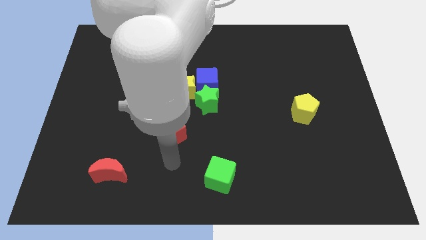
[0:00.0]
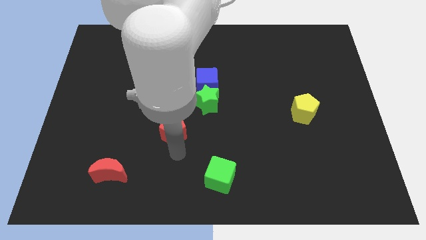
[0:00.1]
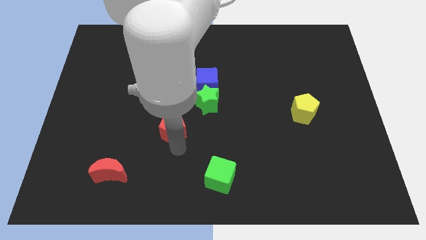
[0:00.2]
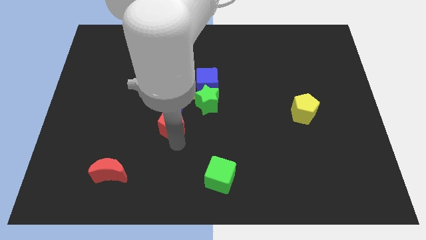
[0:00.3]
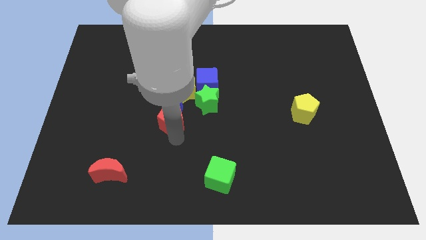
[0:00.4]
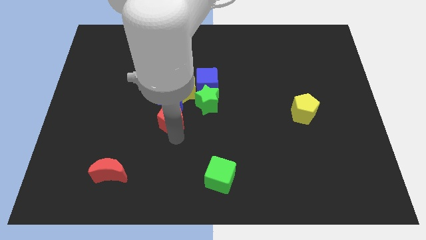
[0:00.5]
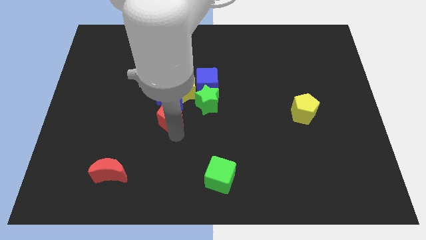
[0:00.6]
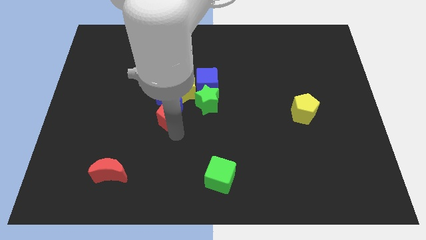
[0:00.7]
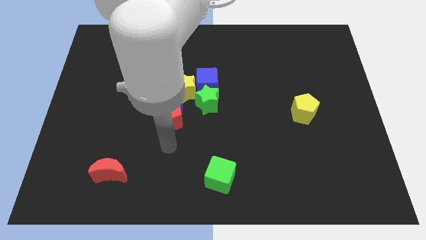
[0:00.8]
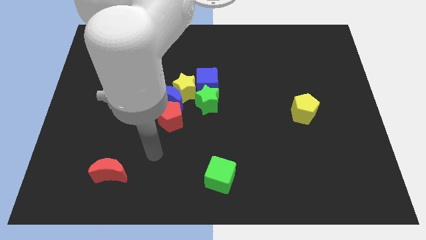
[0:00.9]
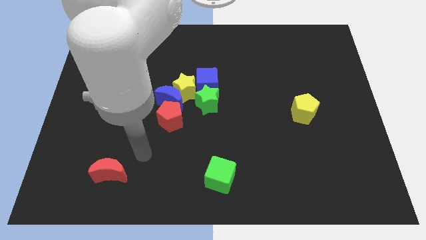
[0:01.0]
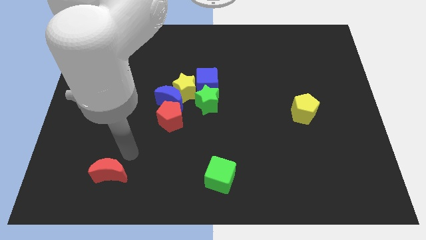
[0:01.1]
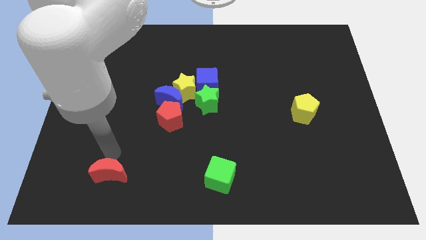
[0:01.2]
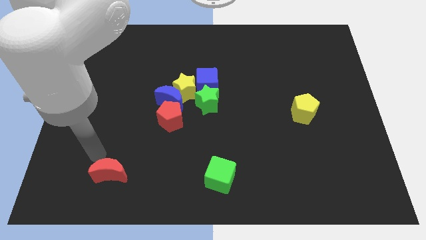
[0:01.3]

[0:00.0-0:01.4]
place red pentagon near blue crescent

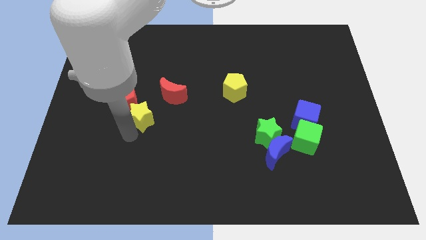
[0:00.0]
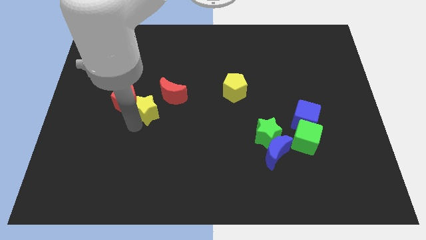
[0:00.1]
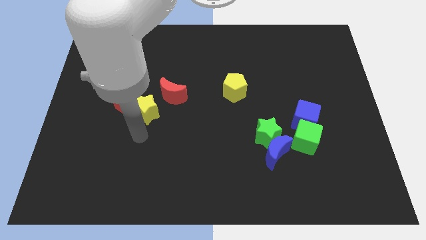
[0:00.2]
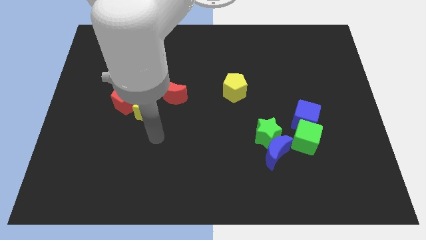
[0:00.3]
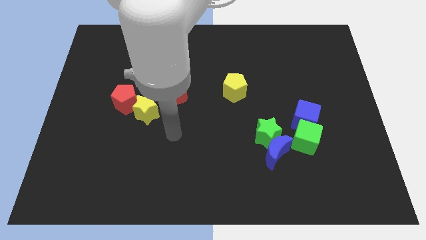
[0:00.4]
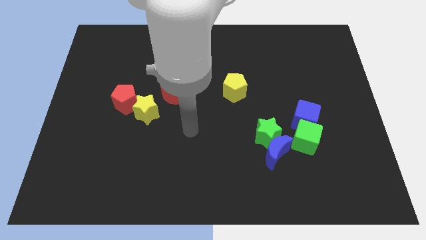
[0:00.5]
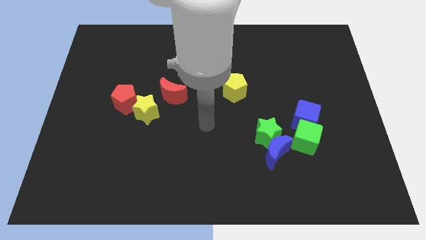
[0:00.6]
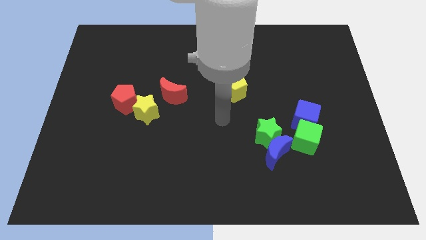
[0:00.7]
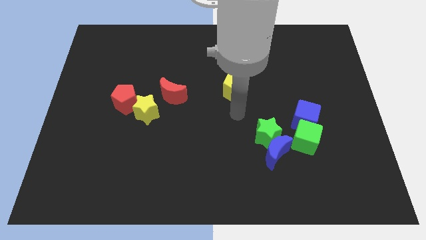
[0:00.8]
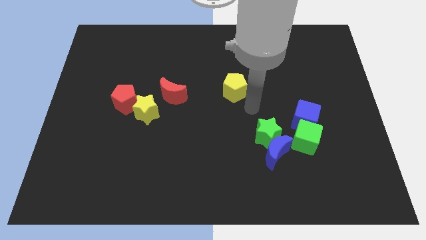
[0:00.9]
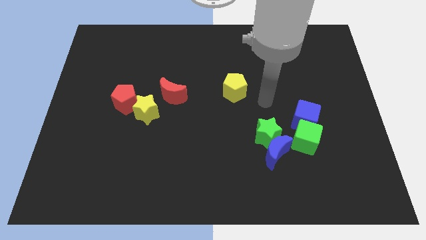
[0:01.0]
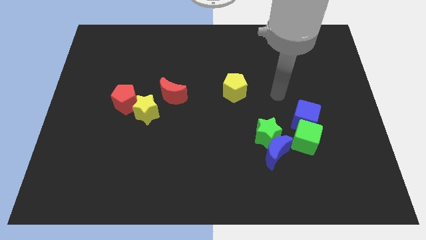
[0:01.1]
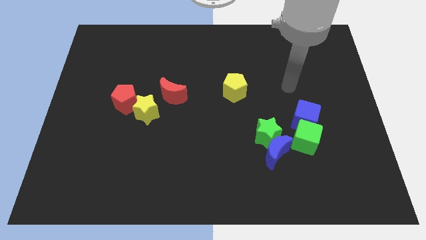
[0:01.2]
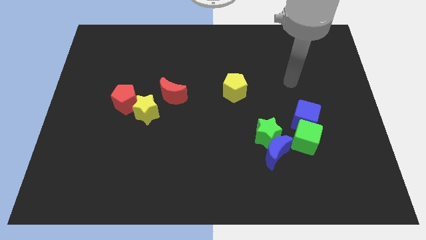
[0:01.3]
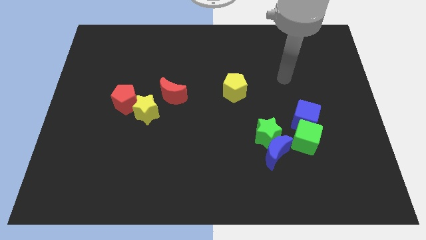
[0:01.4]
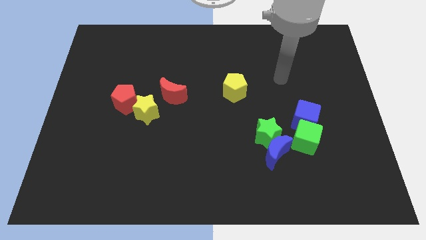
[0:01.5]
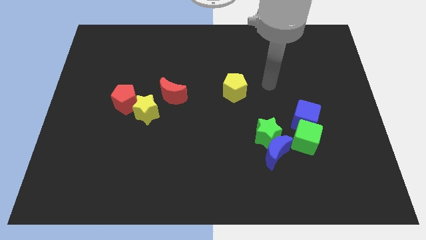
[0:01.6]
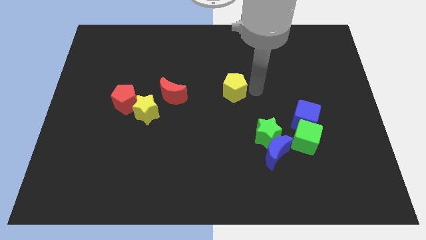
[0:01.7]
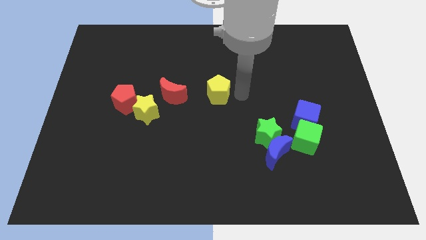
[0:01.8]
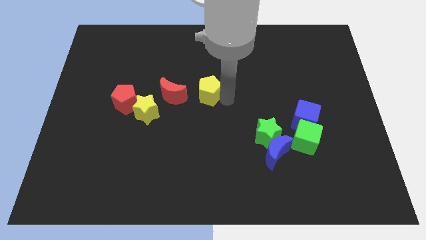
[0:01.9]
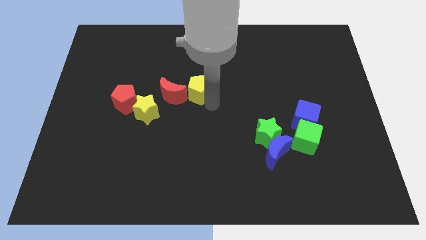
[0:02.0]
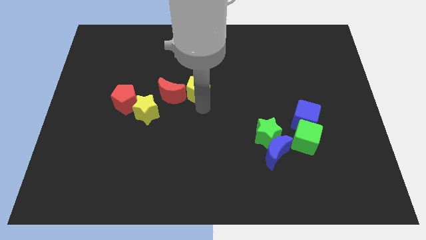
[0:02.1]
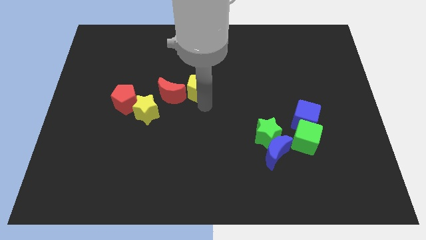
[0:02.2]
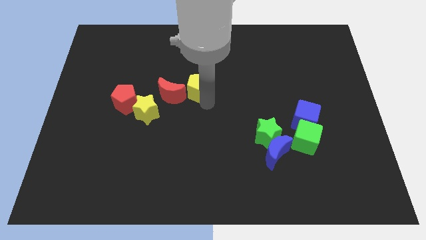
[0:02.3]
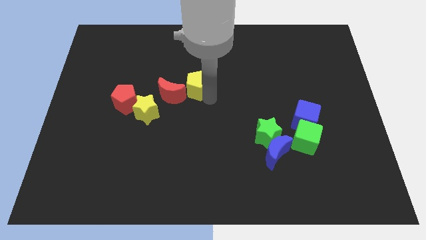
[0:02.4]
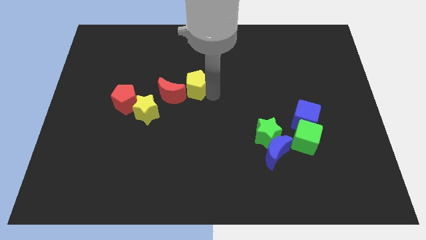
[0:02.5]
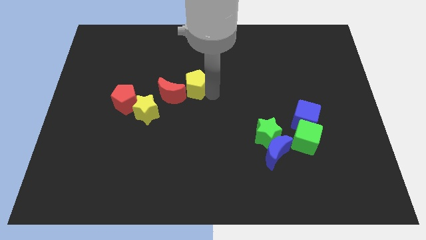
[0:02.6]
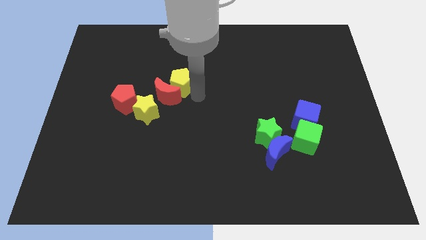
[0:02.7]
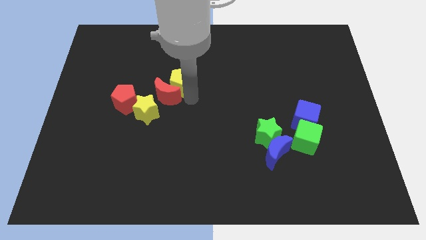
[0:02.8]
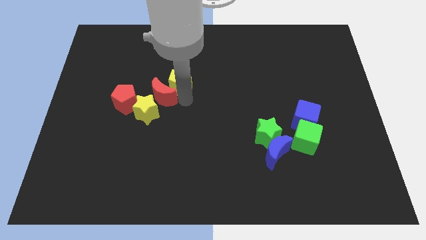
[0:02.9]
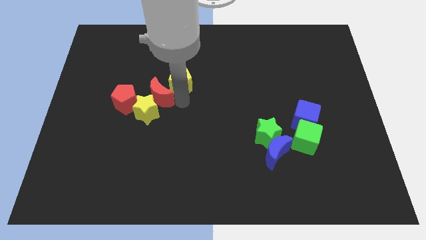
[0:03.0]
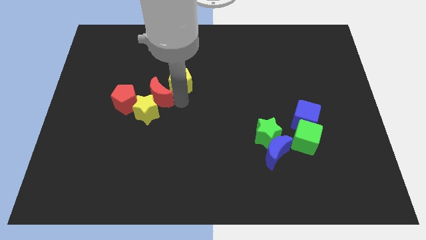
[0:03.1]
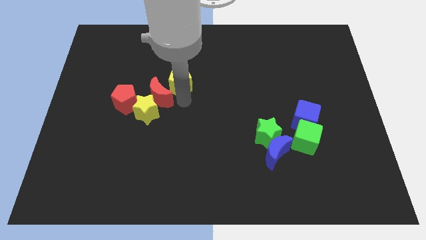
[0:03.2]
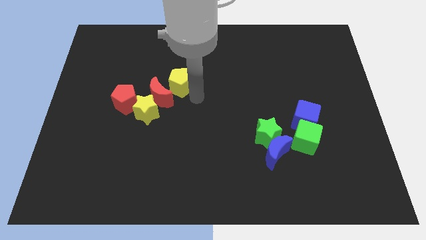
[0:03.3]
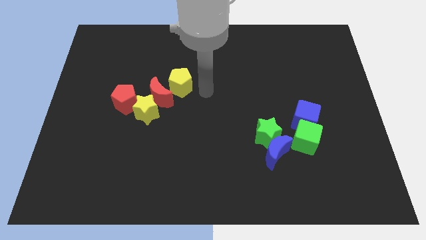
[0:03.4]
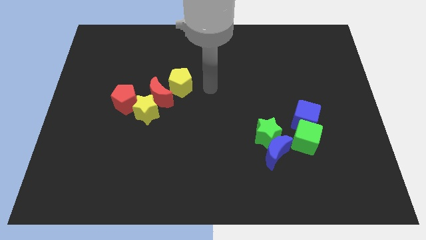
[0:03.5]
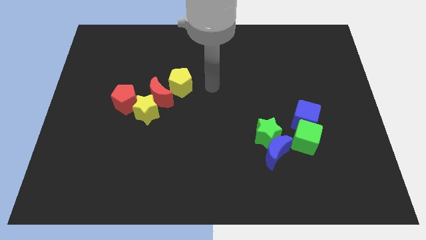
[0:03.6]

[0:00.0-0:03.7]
make a group of yellow and red blocks

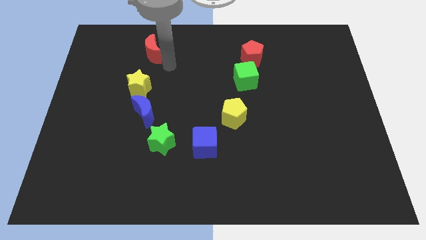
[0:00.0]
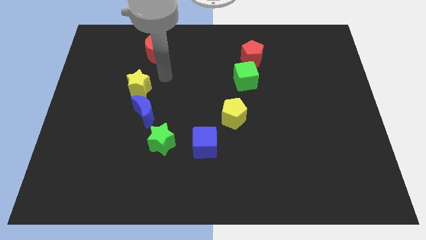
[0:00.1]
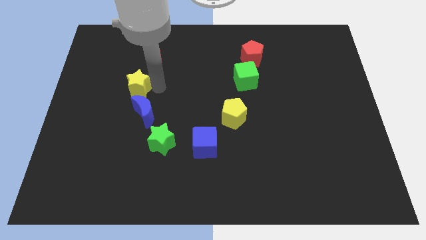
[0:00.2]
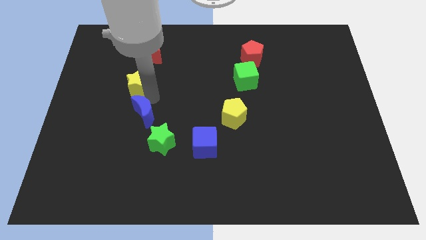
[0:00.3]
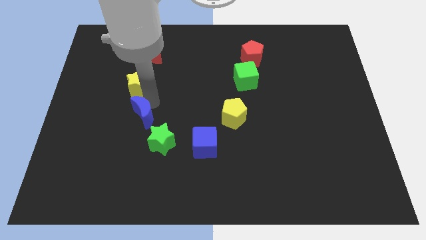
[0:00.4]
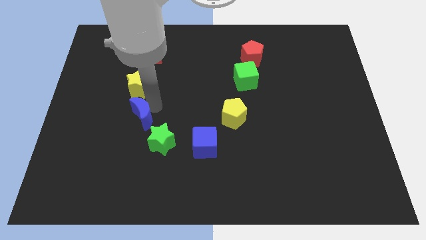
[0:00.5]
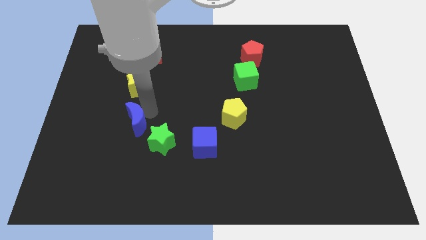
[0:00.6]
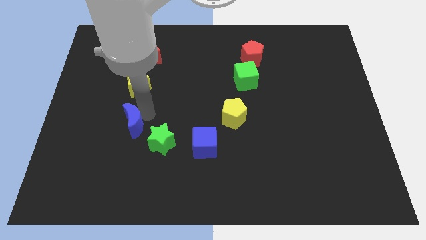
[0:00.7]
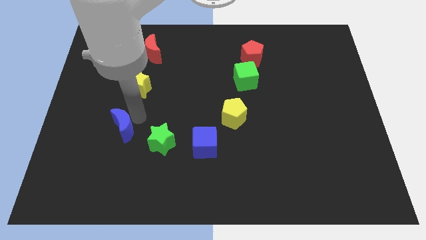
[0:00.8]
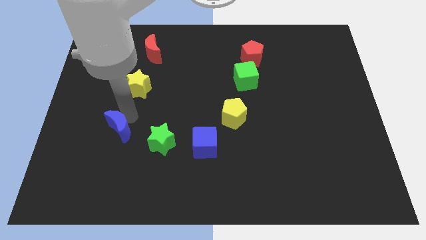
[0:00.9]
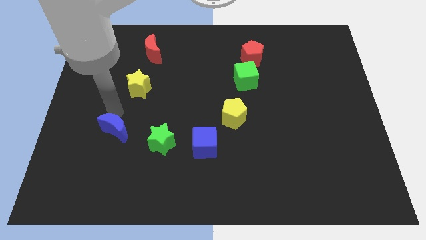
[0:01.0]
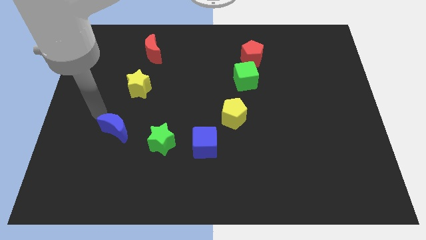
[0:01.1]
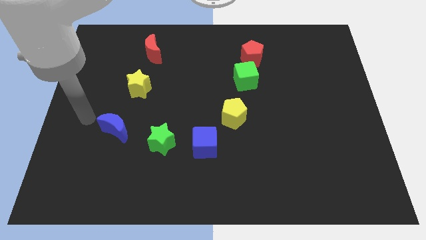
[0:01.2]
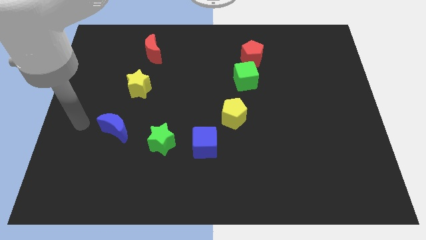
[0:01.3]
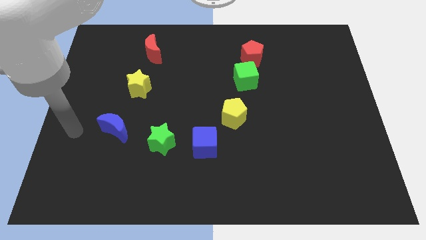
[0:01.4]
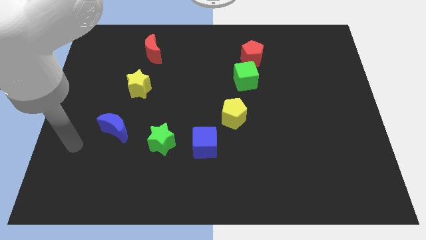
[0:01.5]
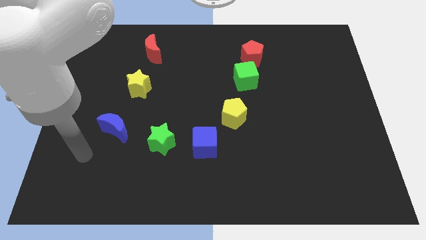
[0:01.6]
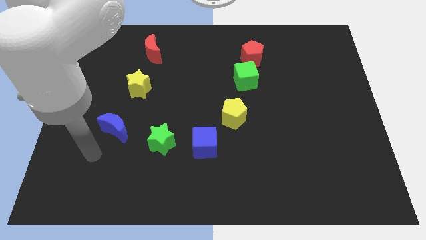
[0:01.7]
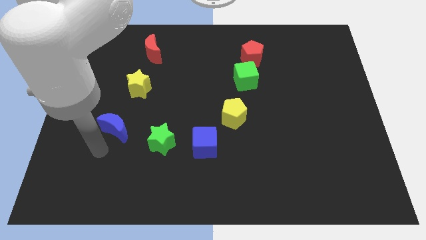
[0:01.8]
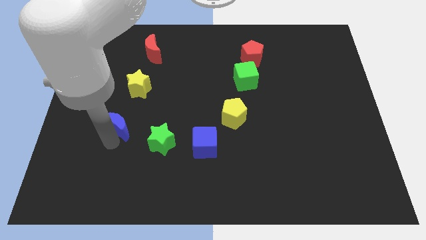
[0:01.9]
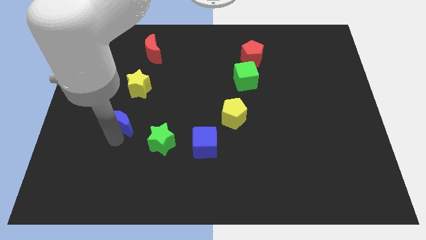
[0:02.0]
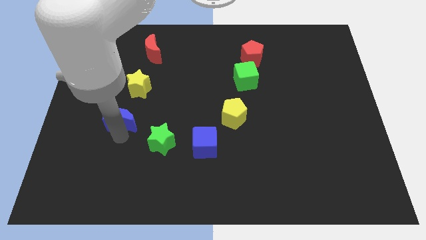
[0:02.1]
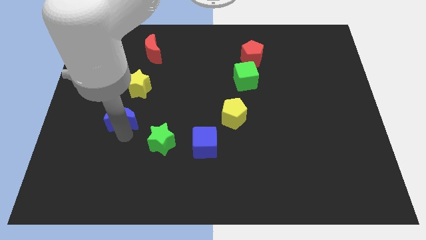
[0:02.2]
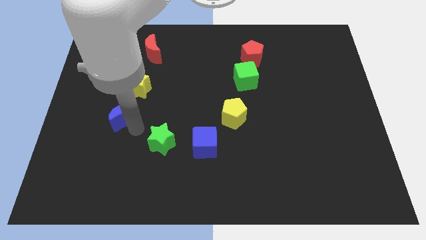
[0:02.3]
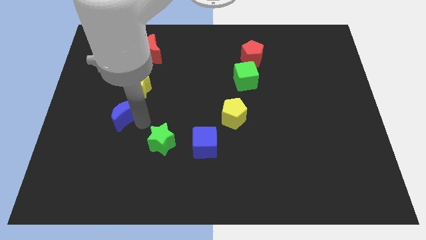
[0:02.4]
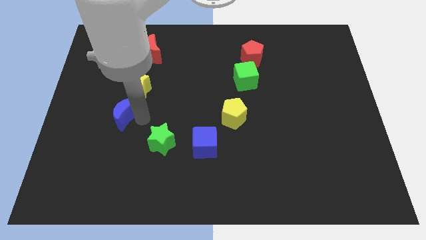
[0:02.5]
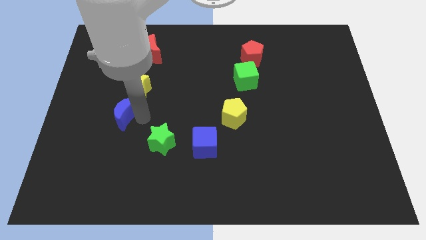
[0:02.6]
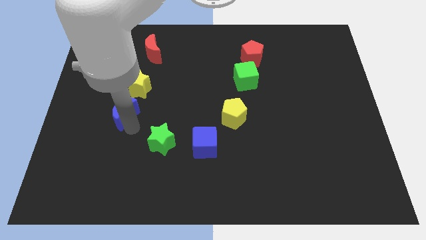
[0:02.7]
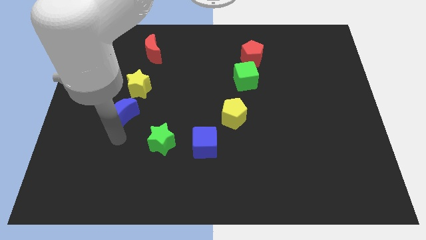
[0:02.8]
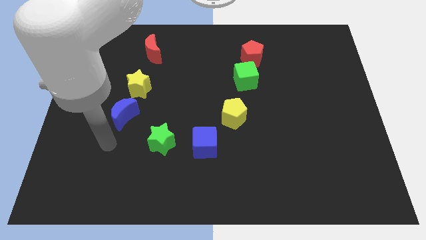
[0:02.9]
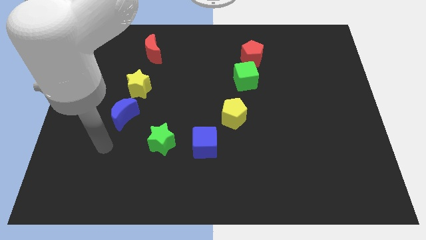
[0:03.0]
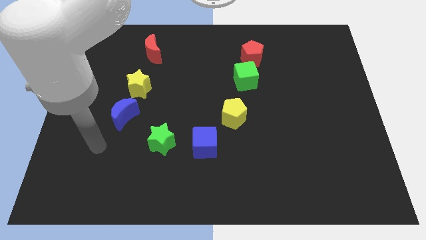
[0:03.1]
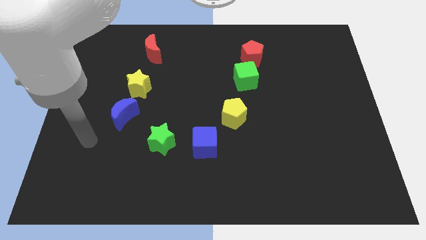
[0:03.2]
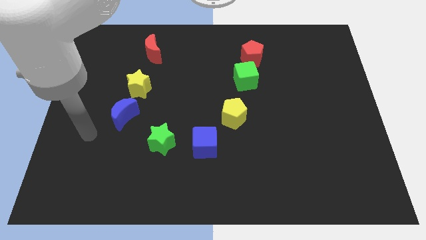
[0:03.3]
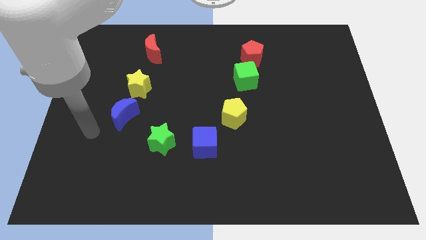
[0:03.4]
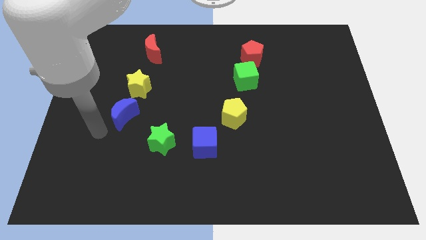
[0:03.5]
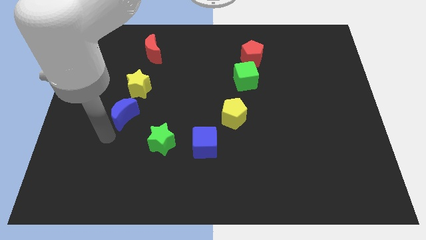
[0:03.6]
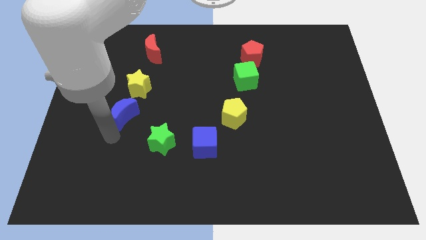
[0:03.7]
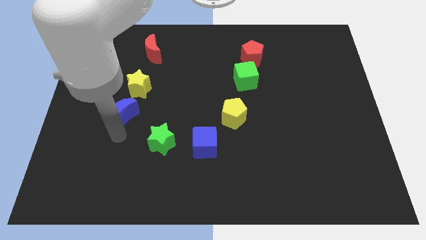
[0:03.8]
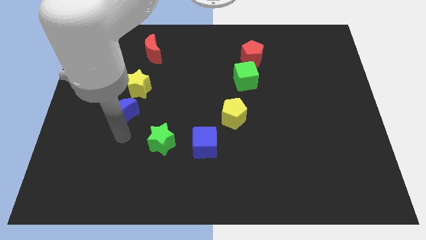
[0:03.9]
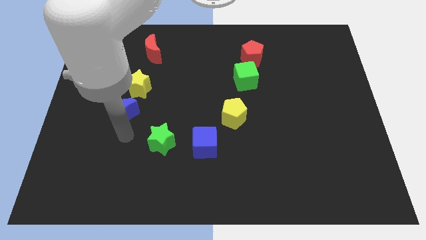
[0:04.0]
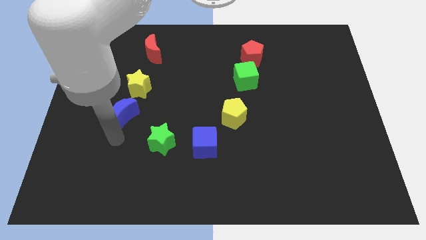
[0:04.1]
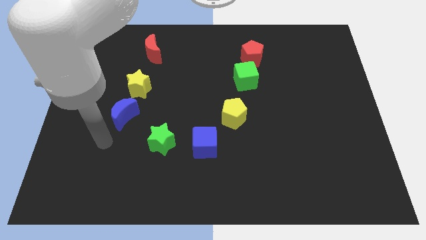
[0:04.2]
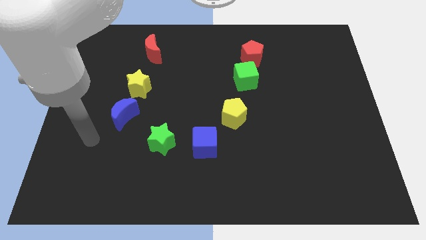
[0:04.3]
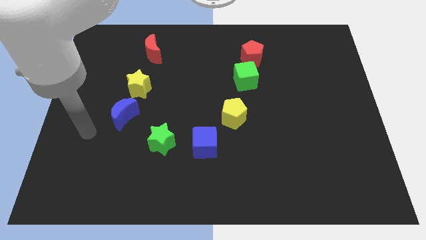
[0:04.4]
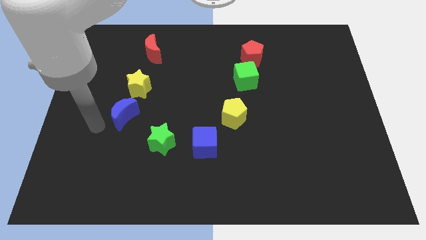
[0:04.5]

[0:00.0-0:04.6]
push the blue moon and adjust below yellow star
